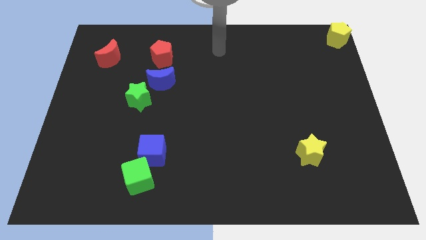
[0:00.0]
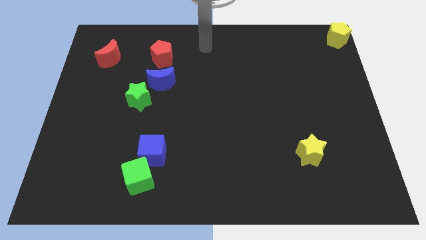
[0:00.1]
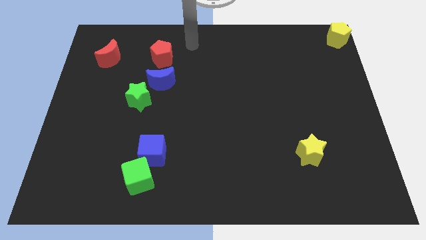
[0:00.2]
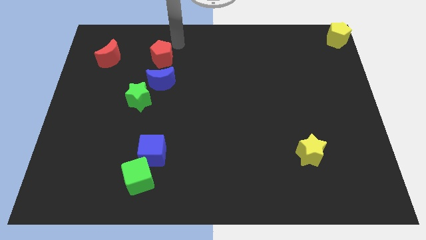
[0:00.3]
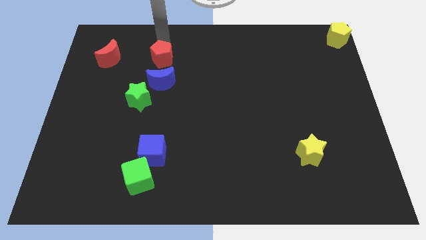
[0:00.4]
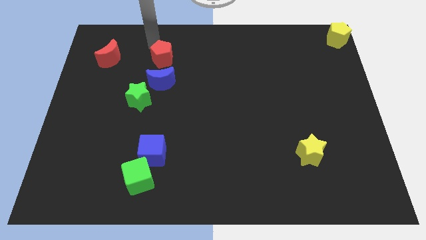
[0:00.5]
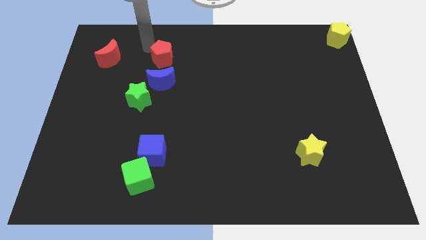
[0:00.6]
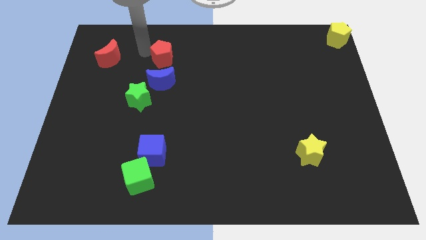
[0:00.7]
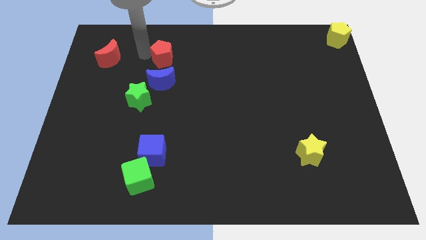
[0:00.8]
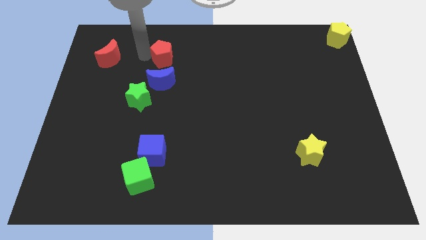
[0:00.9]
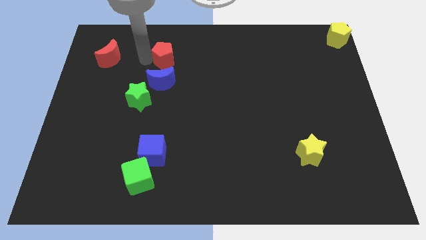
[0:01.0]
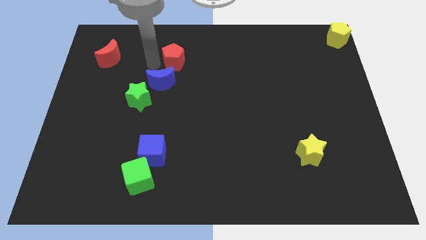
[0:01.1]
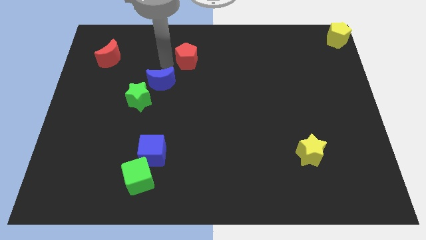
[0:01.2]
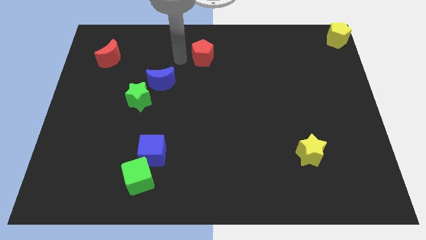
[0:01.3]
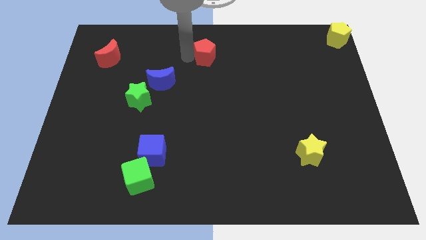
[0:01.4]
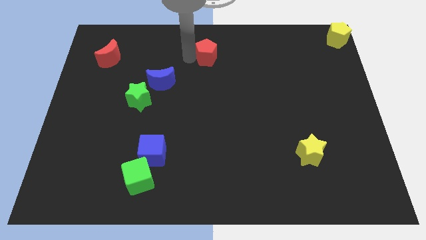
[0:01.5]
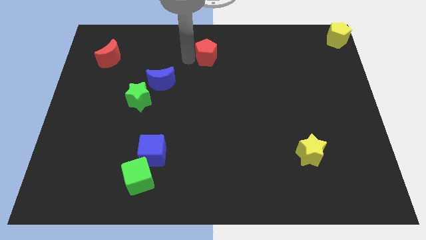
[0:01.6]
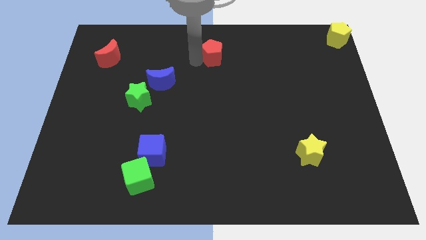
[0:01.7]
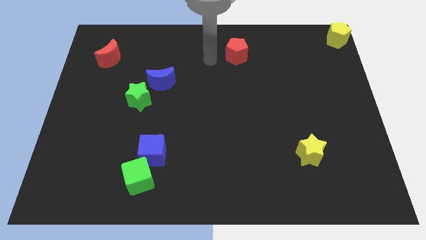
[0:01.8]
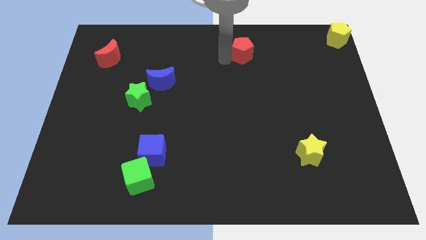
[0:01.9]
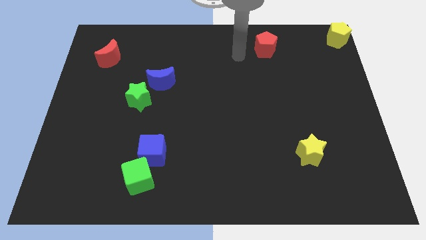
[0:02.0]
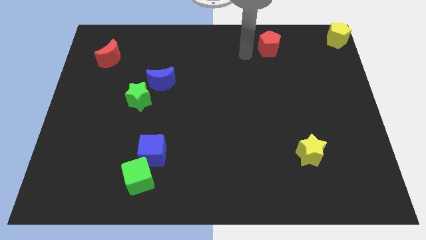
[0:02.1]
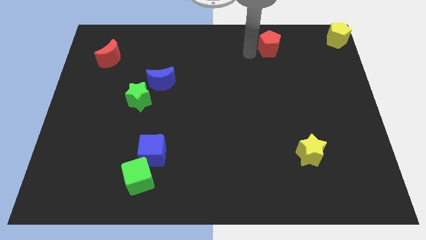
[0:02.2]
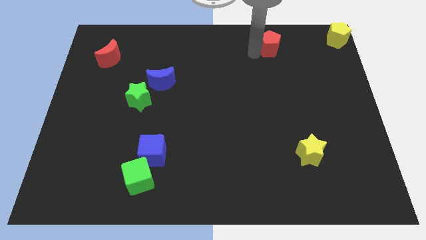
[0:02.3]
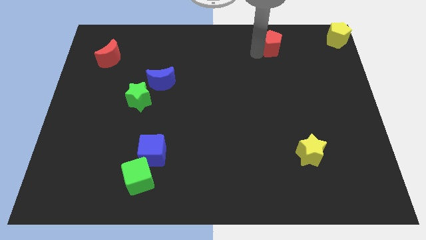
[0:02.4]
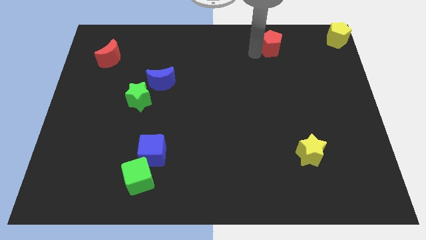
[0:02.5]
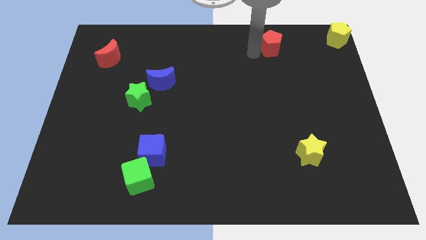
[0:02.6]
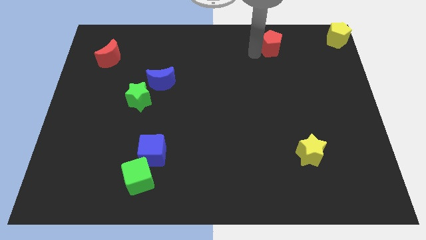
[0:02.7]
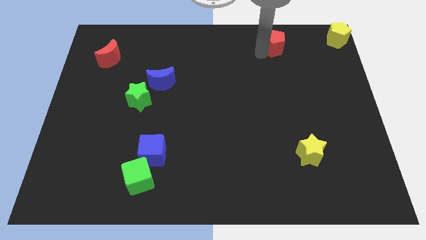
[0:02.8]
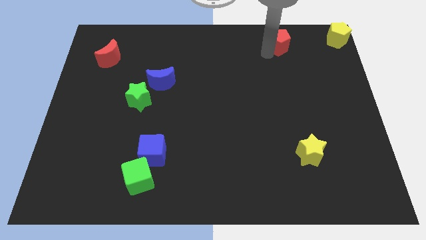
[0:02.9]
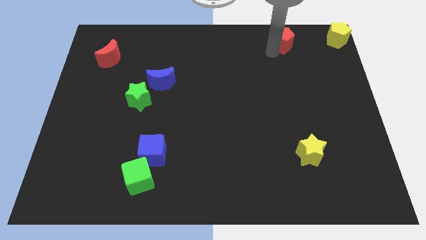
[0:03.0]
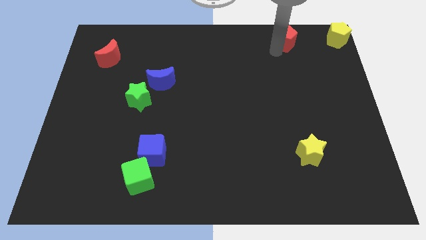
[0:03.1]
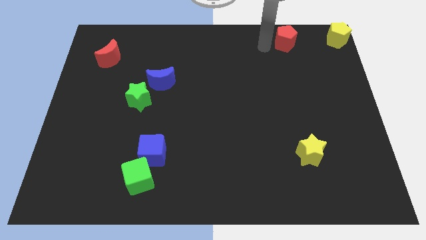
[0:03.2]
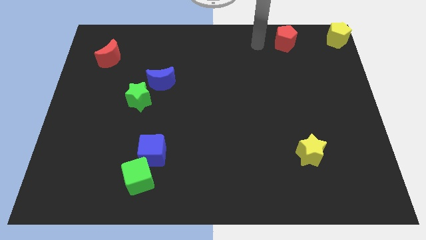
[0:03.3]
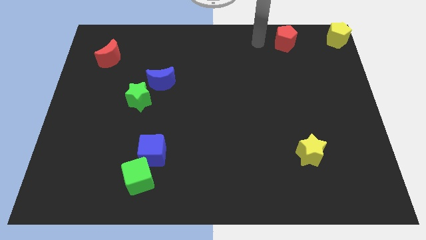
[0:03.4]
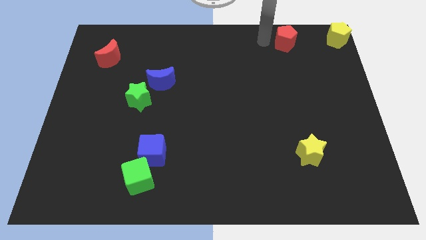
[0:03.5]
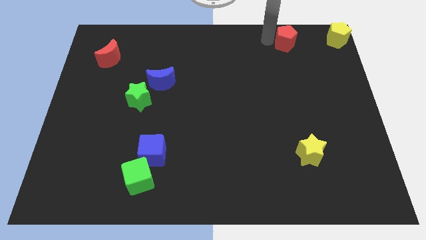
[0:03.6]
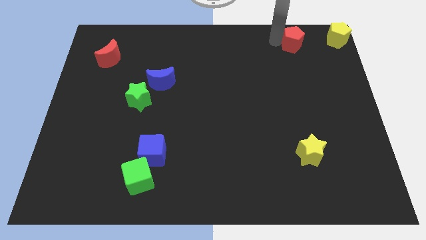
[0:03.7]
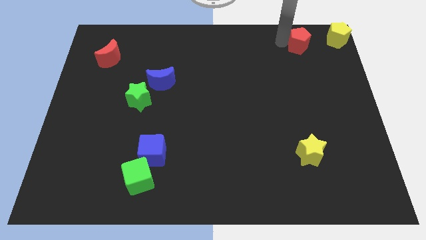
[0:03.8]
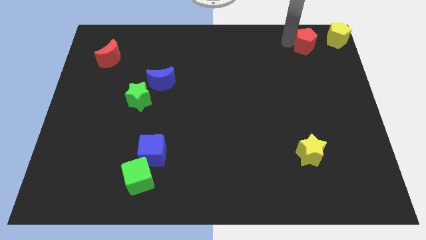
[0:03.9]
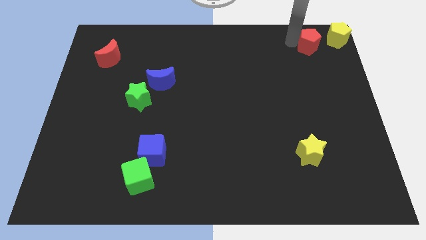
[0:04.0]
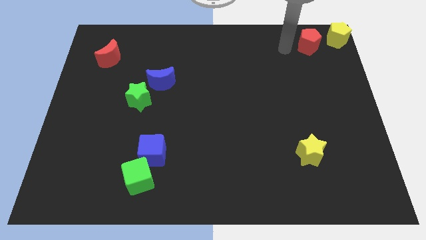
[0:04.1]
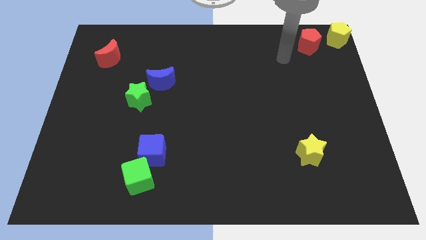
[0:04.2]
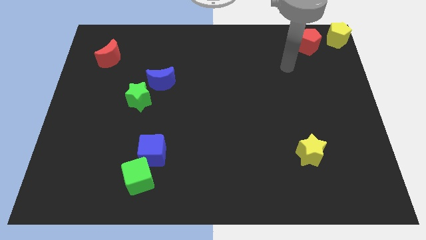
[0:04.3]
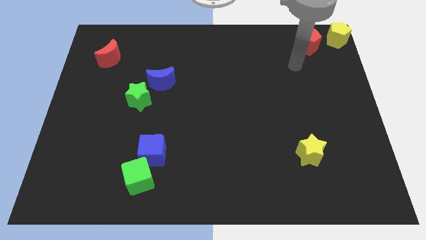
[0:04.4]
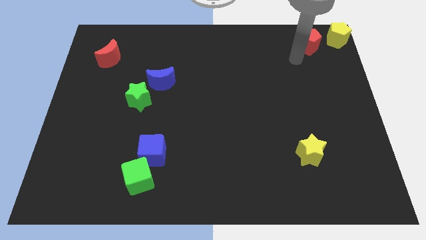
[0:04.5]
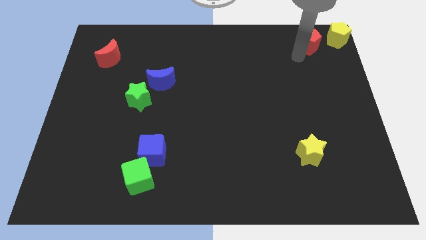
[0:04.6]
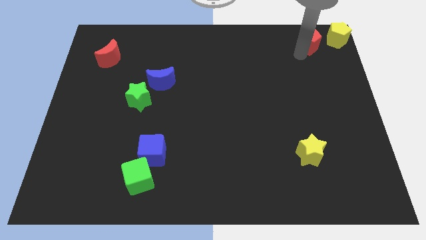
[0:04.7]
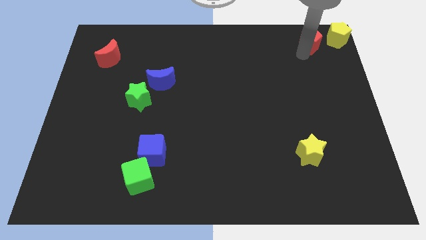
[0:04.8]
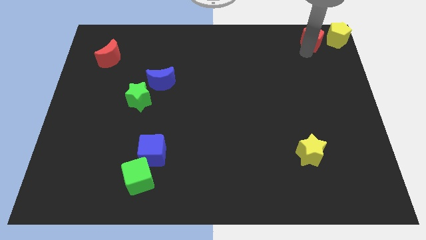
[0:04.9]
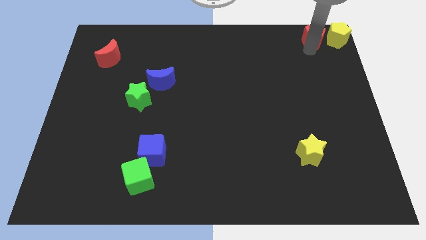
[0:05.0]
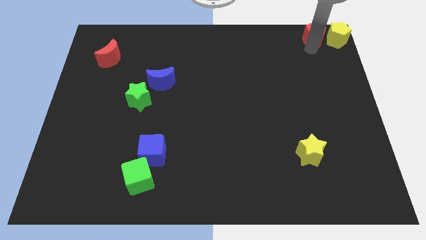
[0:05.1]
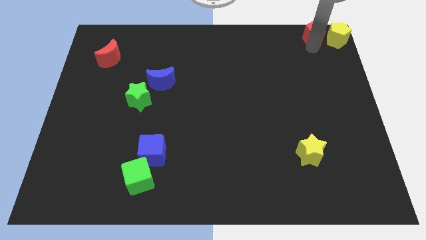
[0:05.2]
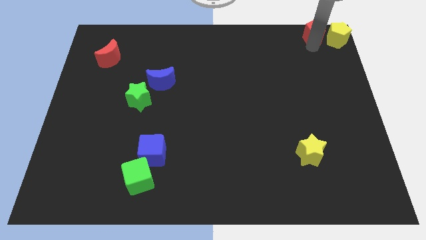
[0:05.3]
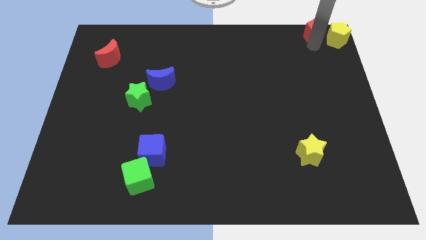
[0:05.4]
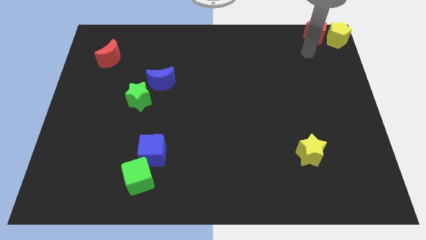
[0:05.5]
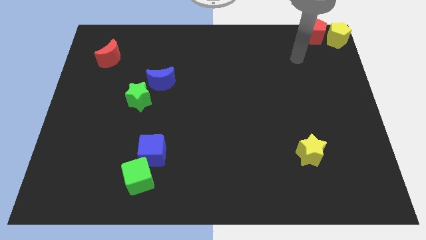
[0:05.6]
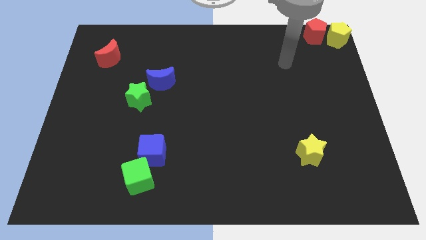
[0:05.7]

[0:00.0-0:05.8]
move the red pentagon to the left side of the yellow pentagon

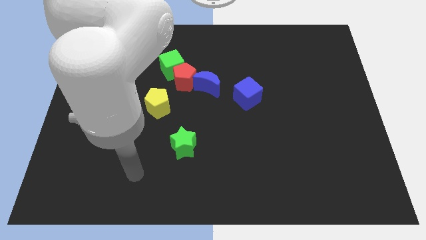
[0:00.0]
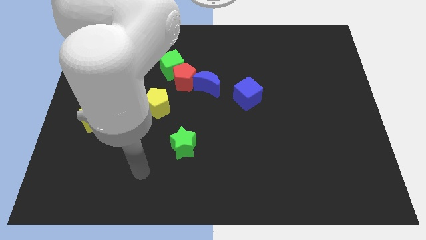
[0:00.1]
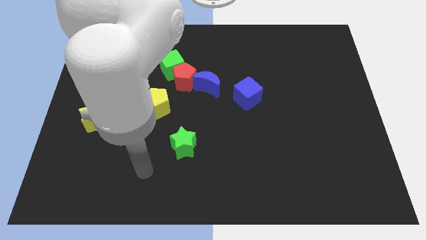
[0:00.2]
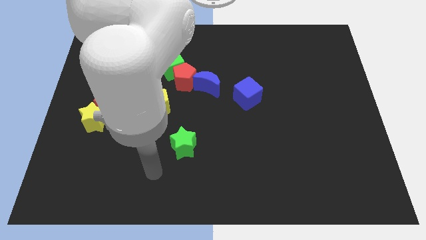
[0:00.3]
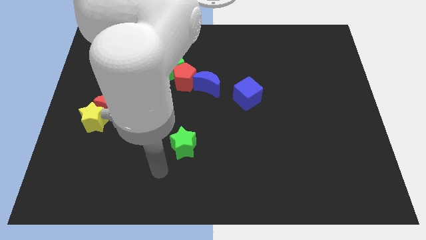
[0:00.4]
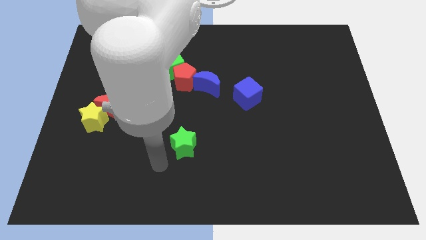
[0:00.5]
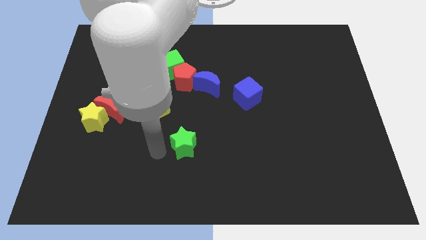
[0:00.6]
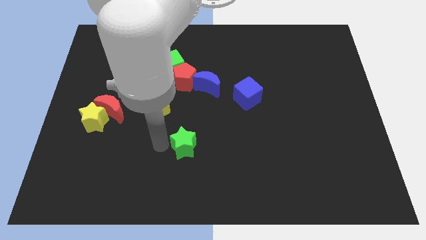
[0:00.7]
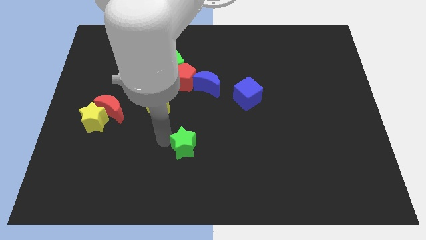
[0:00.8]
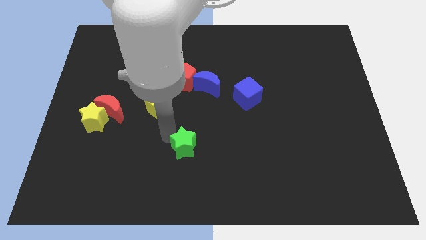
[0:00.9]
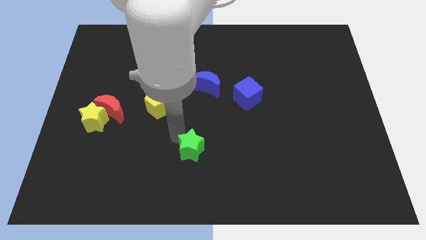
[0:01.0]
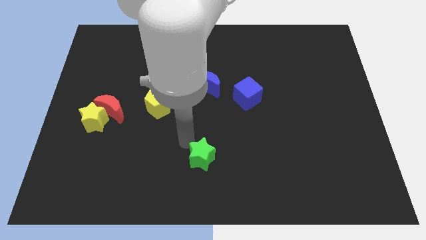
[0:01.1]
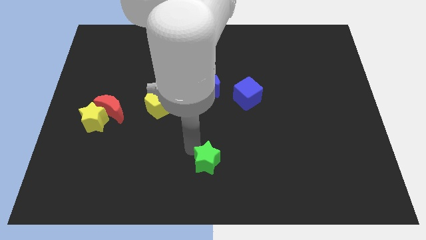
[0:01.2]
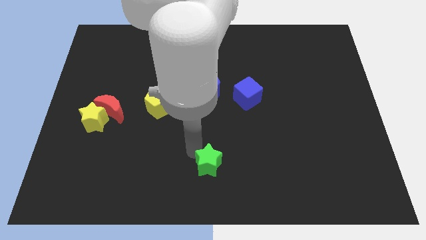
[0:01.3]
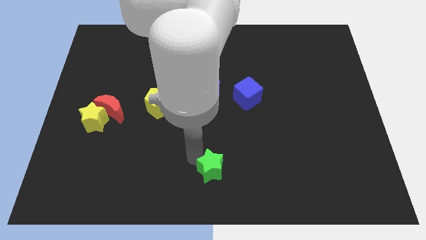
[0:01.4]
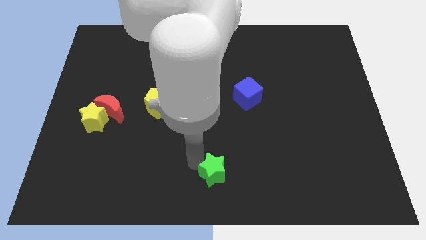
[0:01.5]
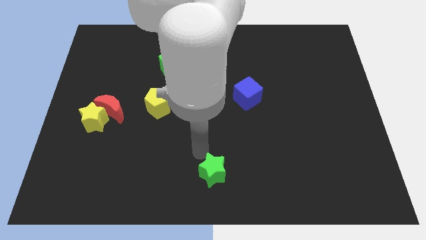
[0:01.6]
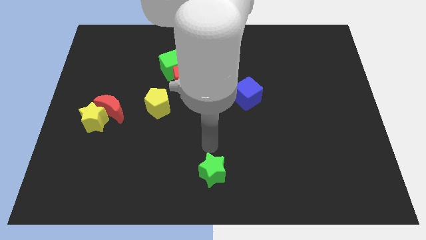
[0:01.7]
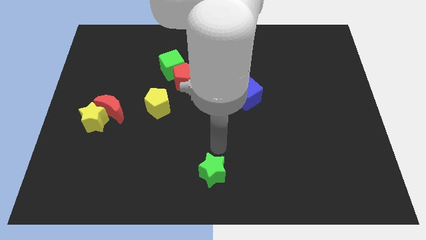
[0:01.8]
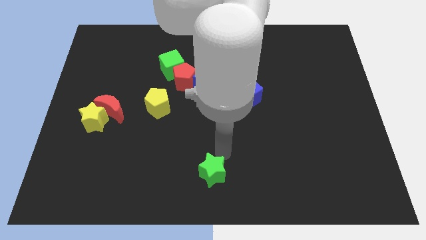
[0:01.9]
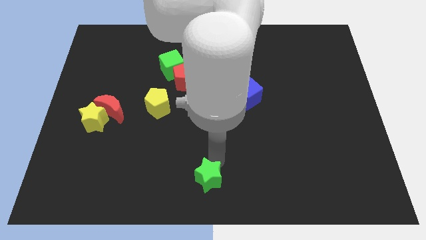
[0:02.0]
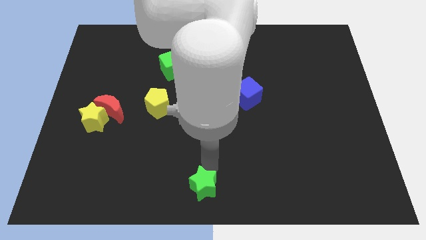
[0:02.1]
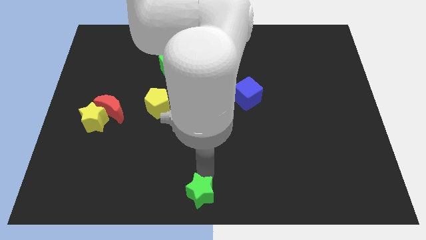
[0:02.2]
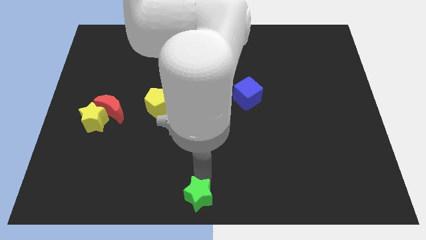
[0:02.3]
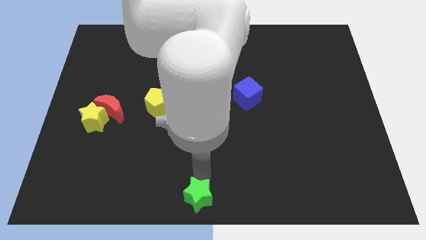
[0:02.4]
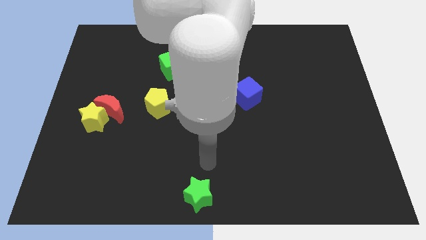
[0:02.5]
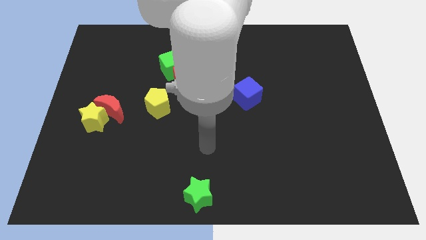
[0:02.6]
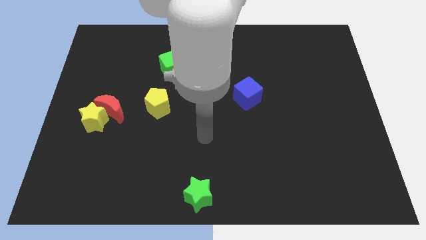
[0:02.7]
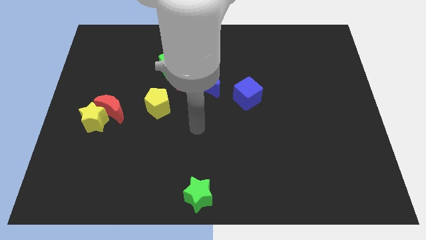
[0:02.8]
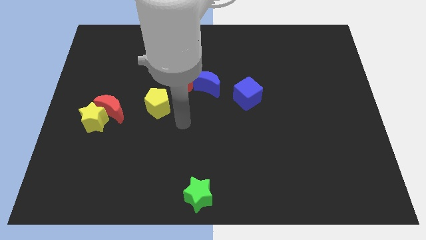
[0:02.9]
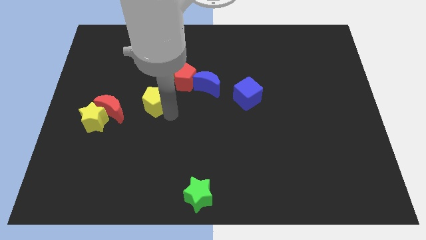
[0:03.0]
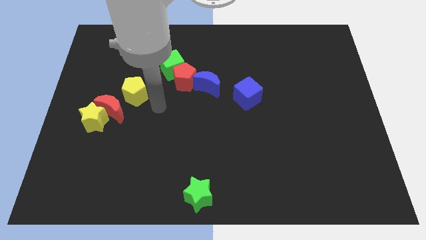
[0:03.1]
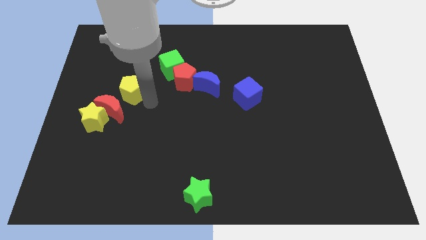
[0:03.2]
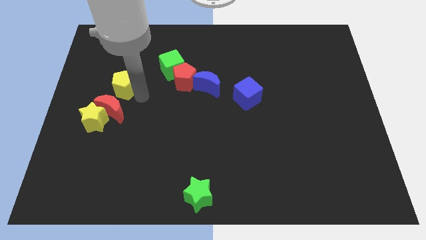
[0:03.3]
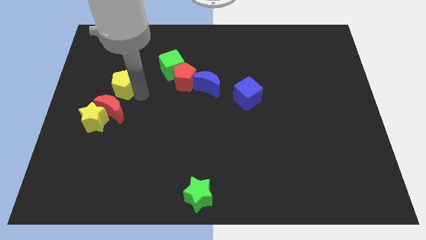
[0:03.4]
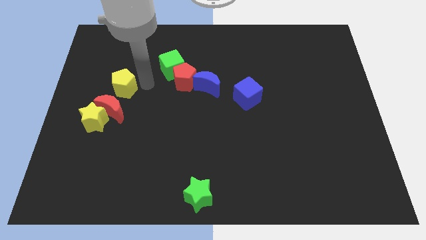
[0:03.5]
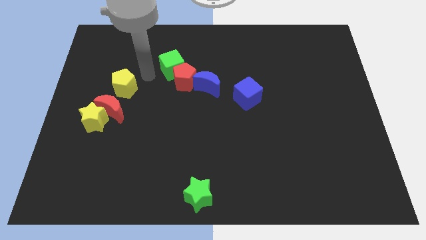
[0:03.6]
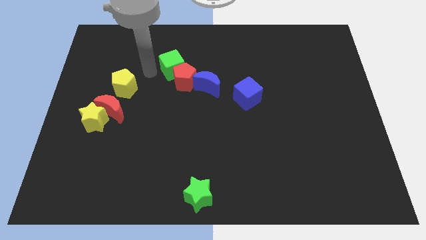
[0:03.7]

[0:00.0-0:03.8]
move the green star to bottom center of the board
